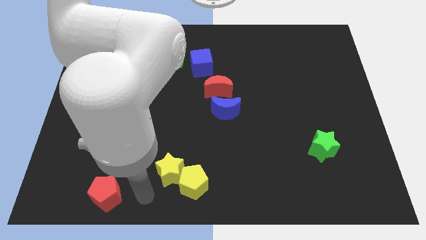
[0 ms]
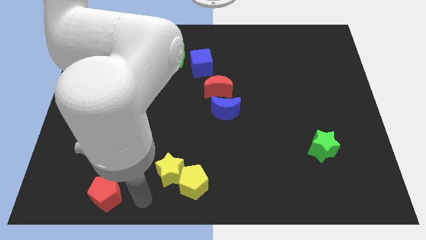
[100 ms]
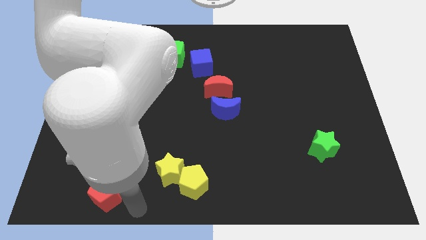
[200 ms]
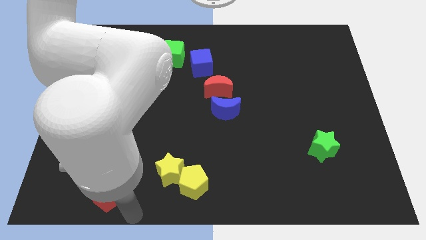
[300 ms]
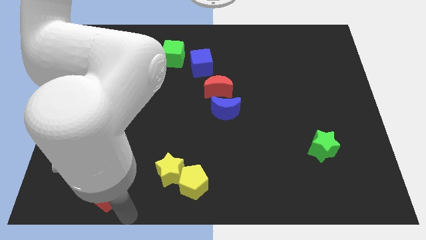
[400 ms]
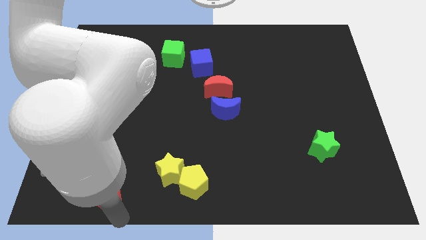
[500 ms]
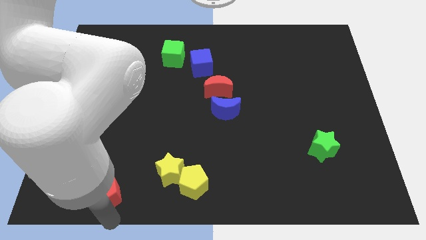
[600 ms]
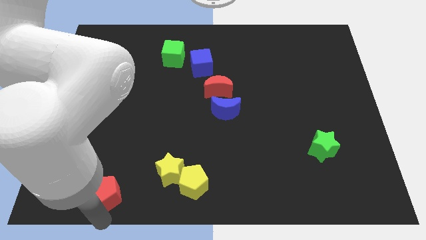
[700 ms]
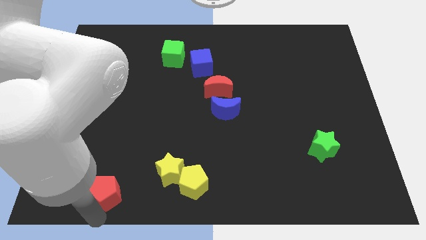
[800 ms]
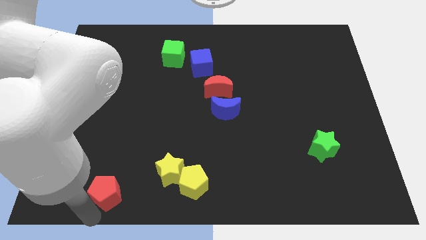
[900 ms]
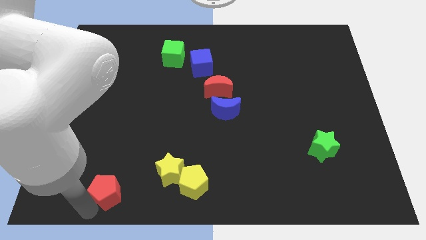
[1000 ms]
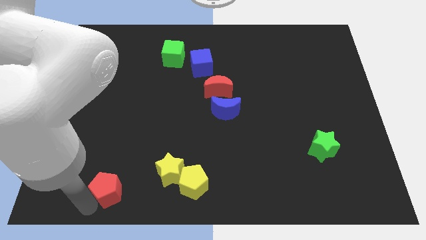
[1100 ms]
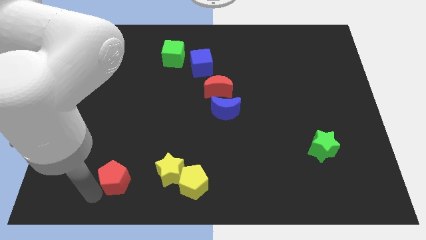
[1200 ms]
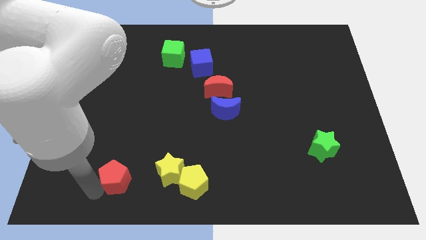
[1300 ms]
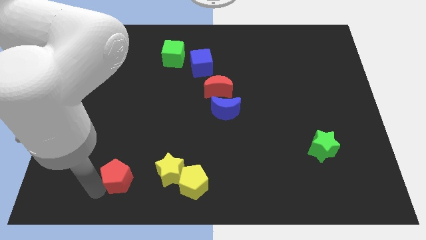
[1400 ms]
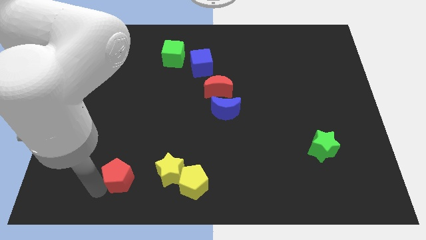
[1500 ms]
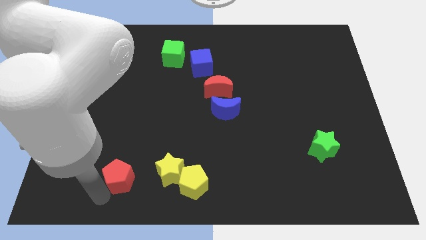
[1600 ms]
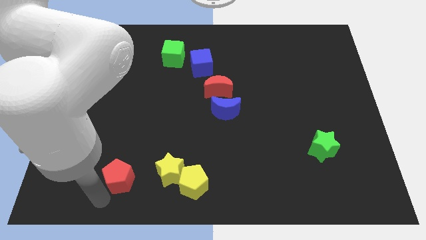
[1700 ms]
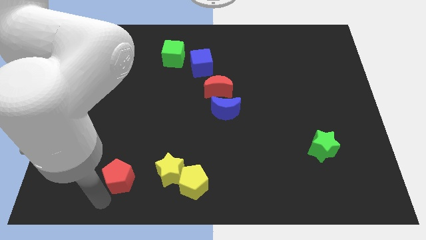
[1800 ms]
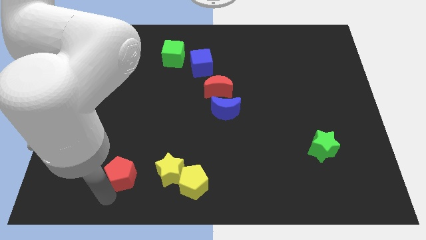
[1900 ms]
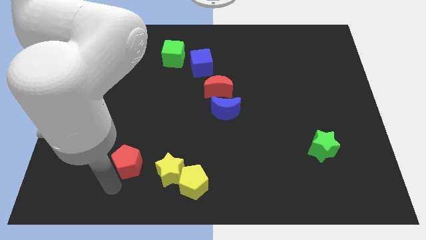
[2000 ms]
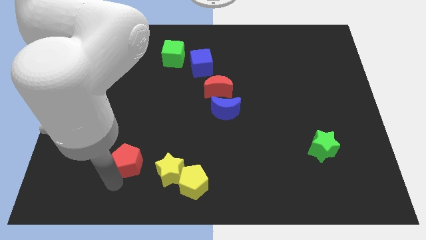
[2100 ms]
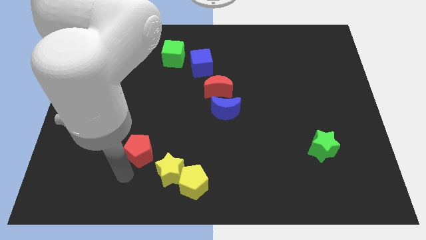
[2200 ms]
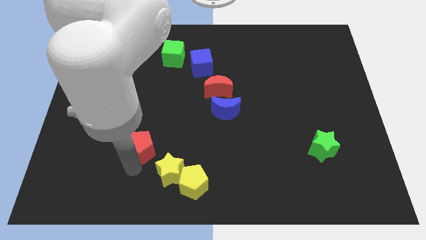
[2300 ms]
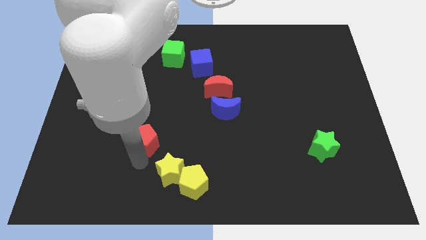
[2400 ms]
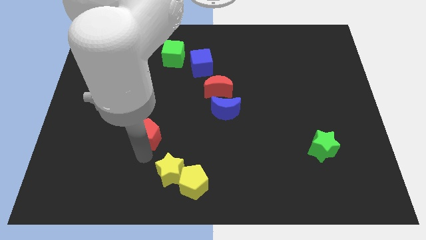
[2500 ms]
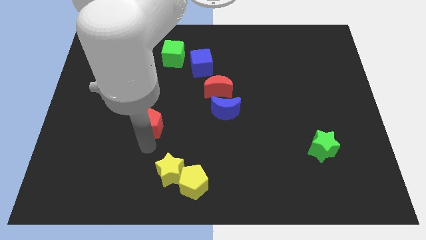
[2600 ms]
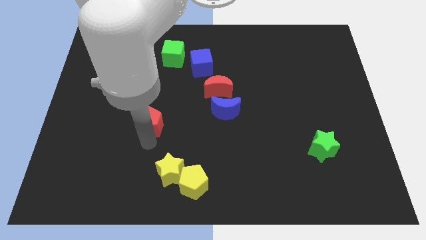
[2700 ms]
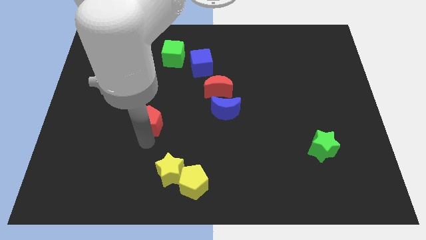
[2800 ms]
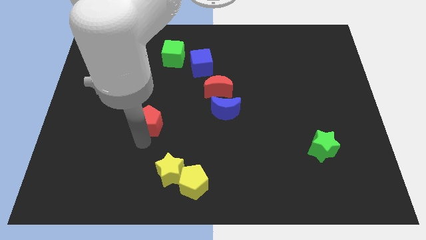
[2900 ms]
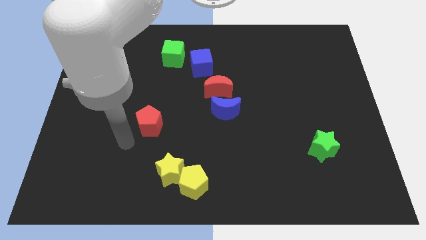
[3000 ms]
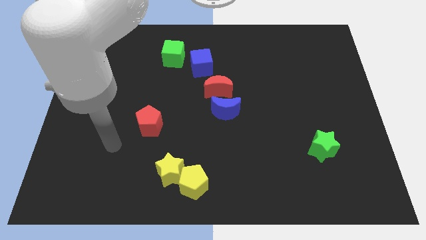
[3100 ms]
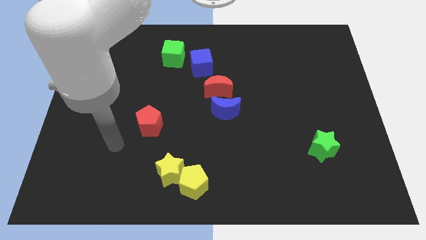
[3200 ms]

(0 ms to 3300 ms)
move the red pentagon to the top left of the yellow star

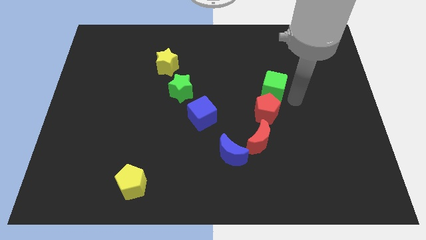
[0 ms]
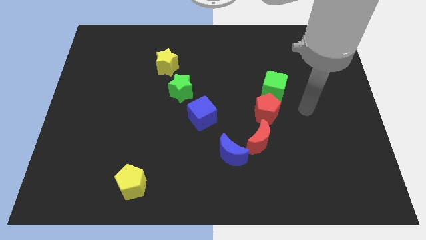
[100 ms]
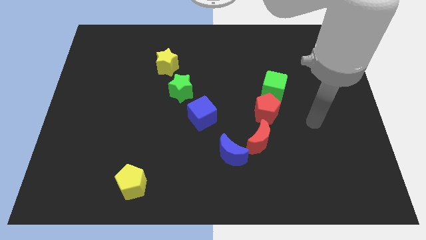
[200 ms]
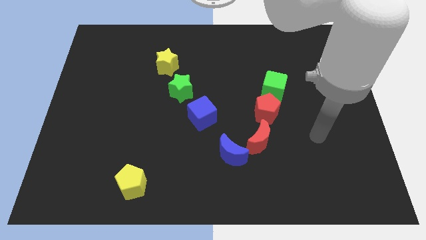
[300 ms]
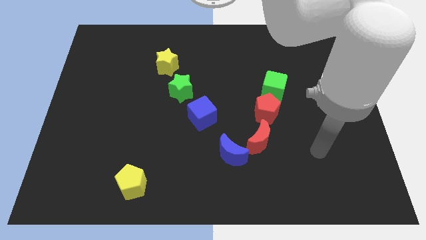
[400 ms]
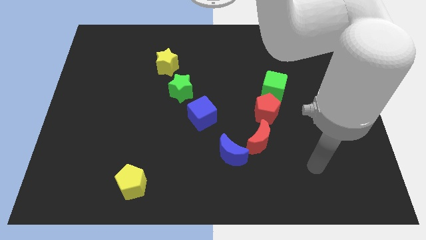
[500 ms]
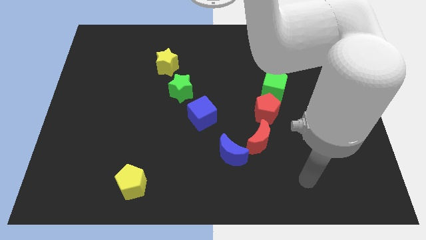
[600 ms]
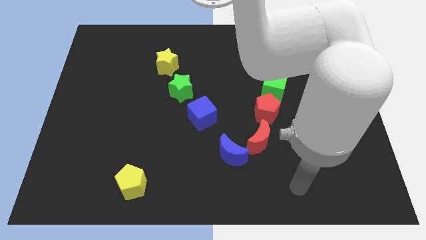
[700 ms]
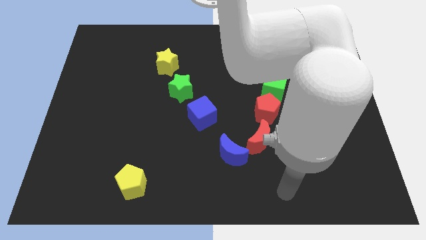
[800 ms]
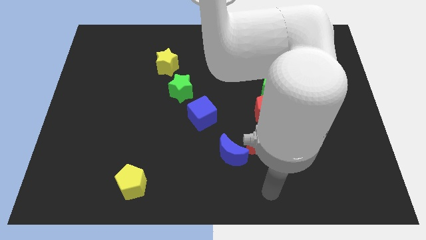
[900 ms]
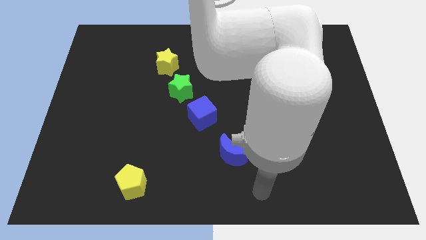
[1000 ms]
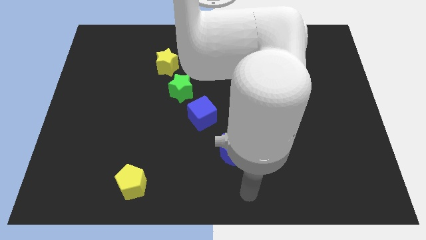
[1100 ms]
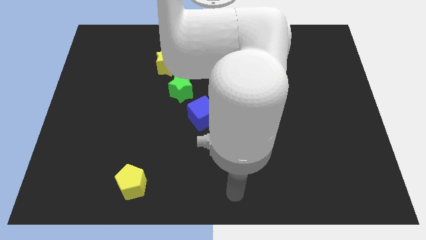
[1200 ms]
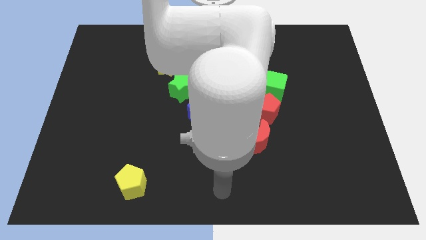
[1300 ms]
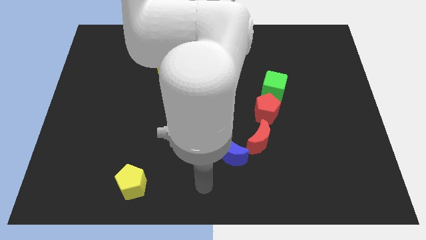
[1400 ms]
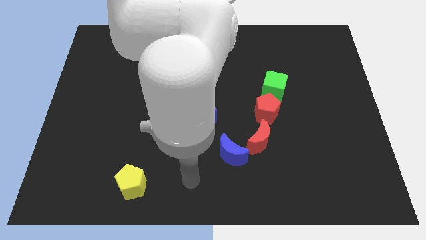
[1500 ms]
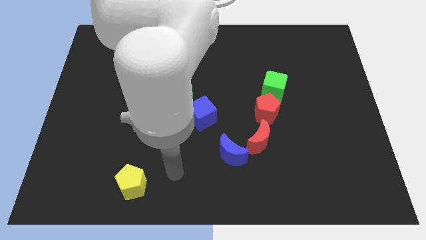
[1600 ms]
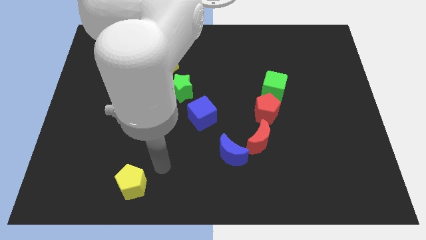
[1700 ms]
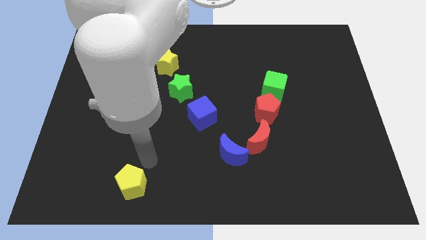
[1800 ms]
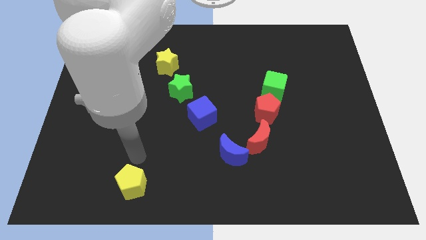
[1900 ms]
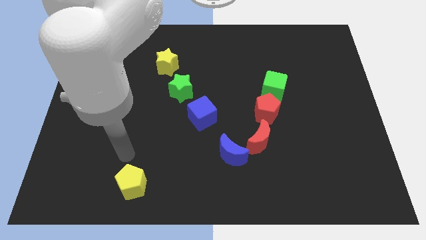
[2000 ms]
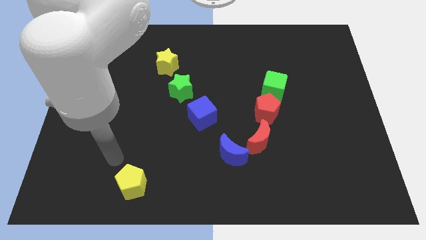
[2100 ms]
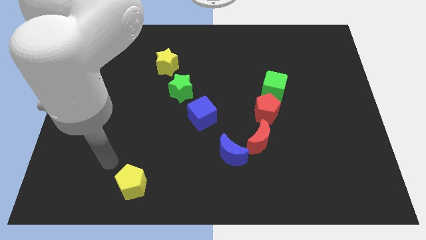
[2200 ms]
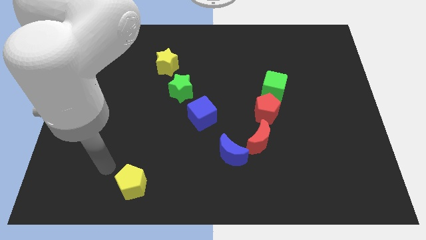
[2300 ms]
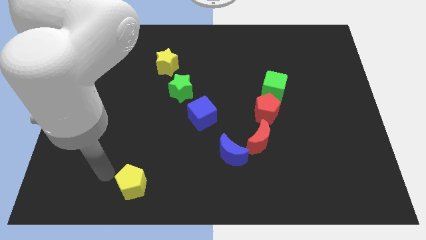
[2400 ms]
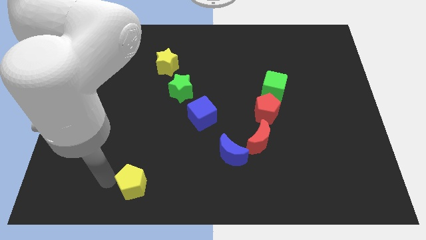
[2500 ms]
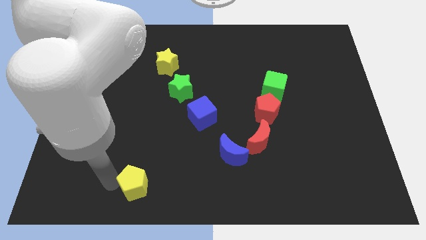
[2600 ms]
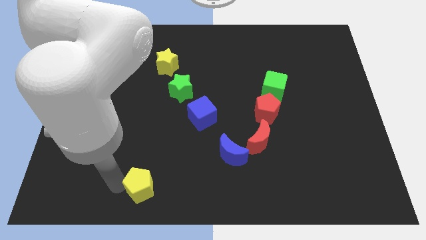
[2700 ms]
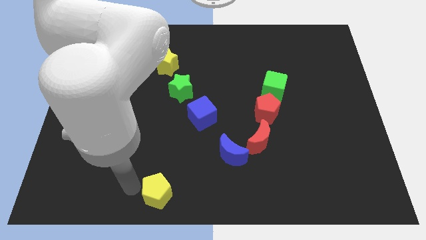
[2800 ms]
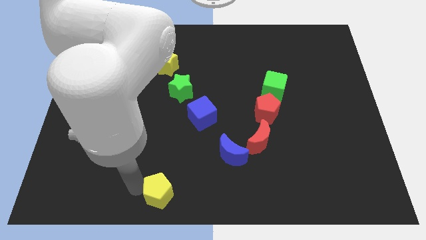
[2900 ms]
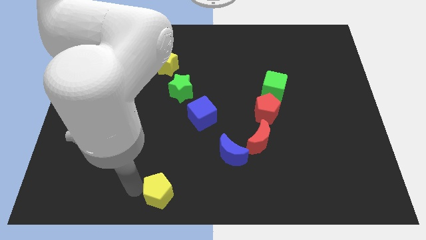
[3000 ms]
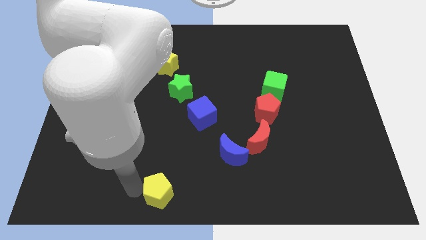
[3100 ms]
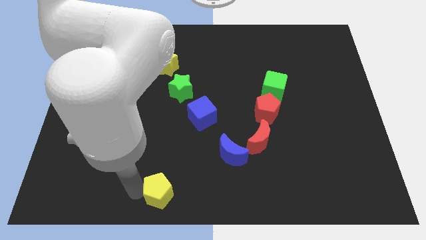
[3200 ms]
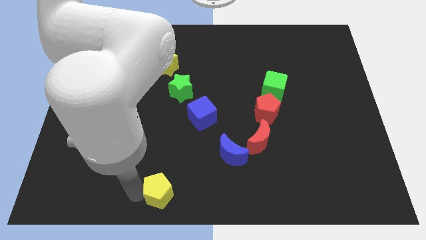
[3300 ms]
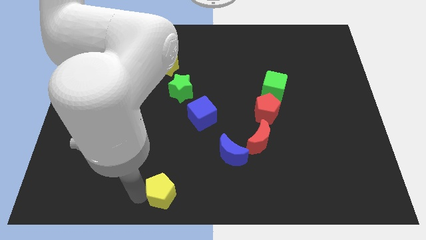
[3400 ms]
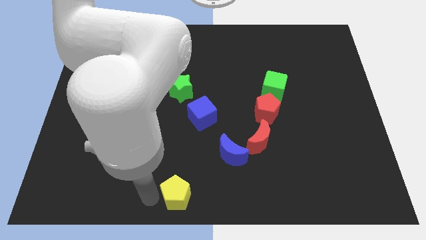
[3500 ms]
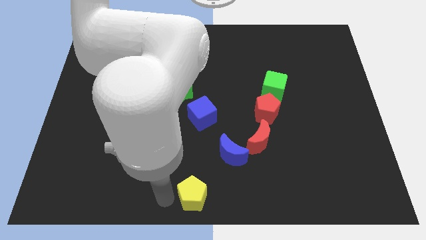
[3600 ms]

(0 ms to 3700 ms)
slide the yellow pentagon at bottom center

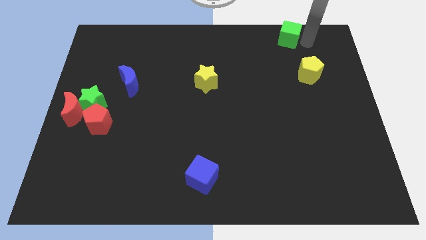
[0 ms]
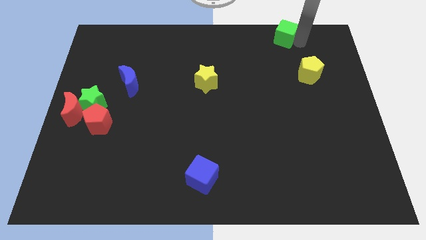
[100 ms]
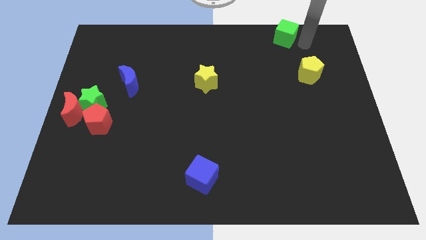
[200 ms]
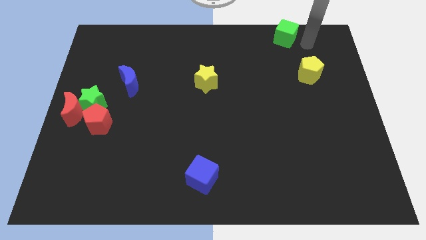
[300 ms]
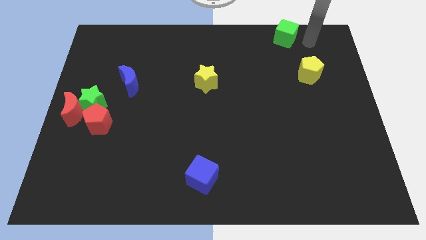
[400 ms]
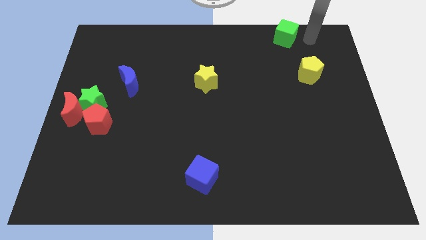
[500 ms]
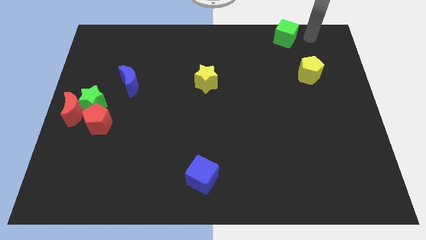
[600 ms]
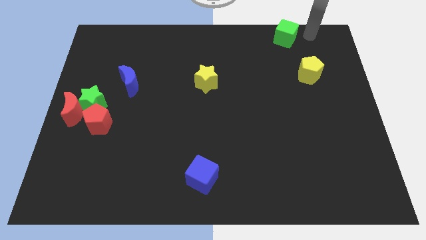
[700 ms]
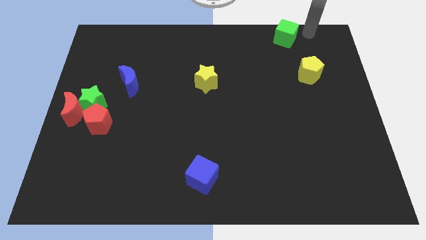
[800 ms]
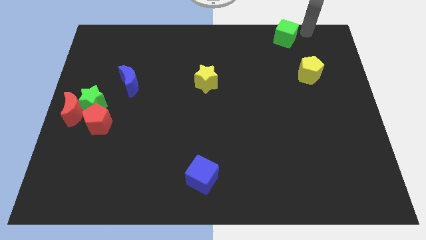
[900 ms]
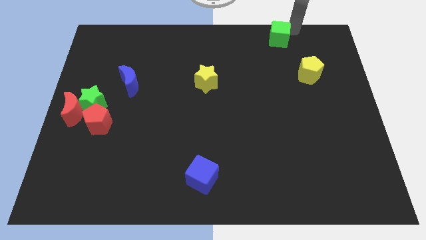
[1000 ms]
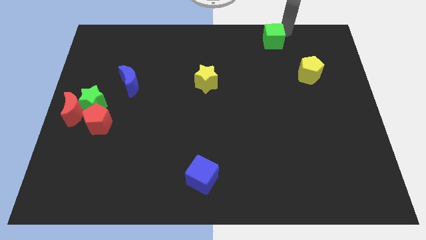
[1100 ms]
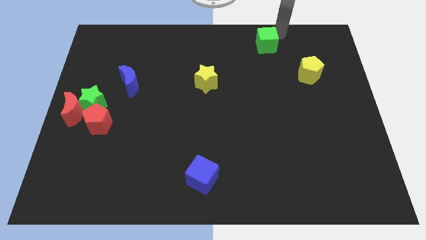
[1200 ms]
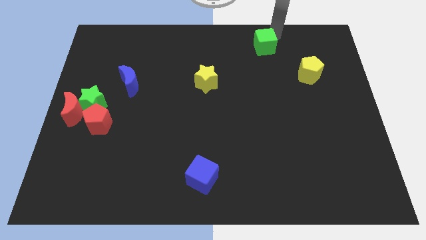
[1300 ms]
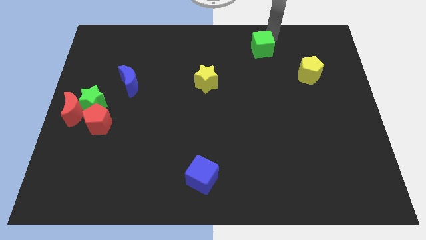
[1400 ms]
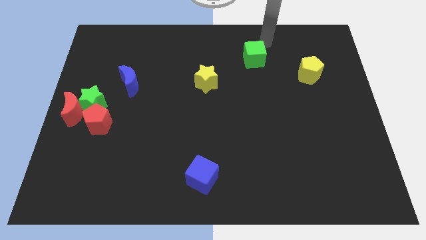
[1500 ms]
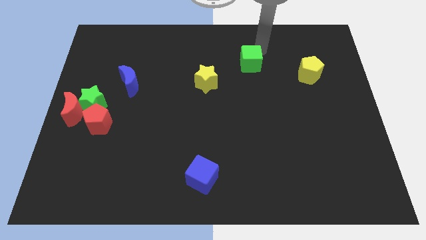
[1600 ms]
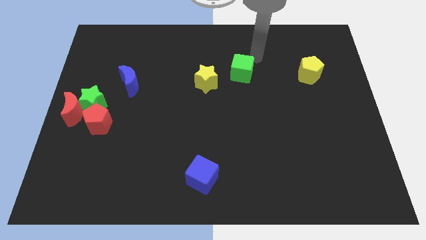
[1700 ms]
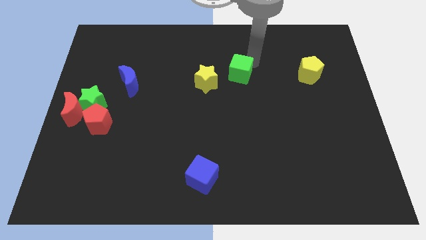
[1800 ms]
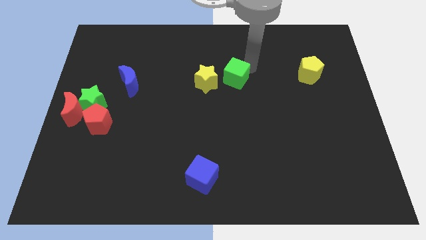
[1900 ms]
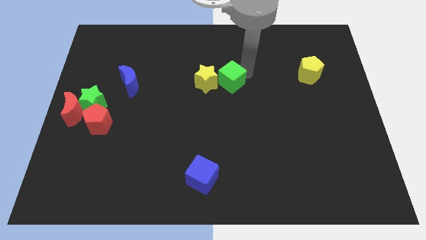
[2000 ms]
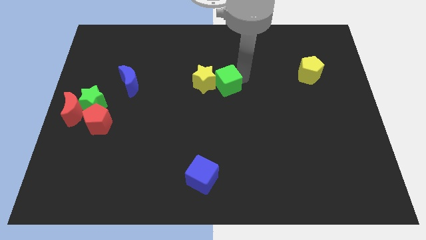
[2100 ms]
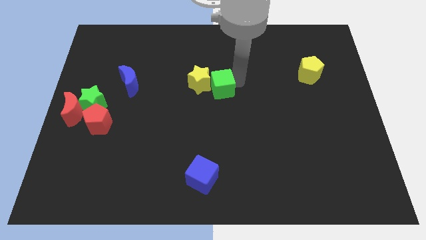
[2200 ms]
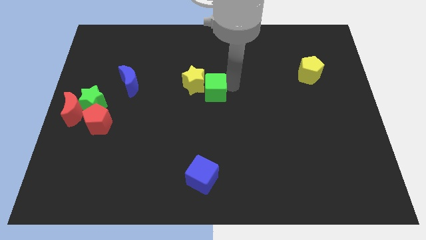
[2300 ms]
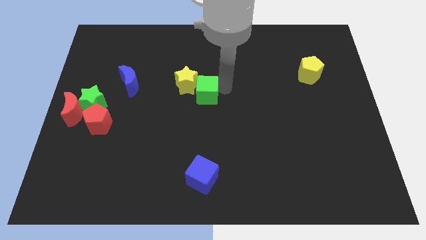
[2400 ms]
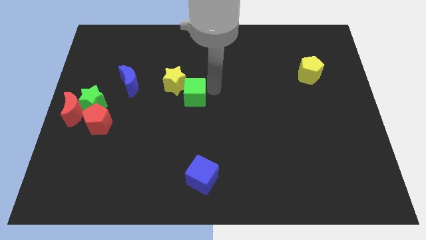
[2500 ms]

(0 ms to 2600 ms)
move the green cube into the yellow star
